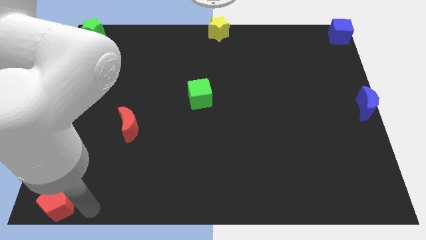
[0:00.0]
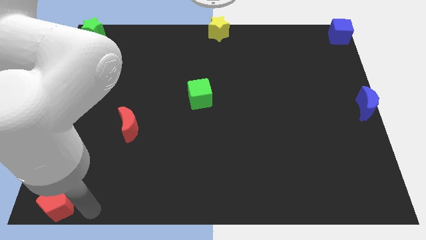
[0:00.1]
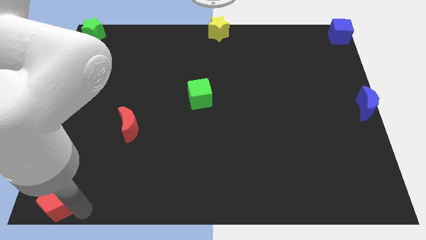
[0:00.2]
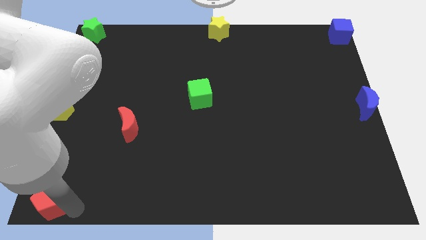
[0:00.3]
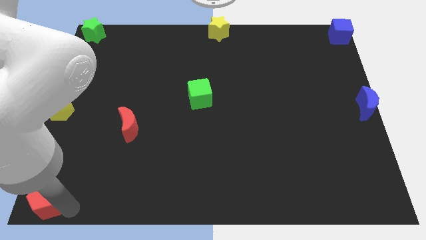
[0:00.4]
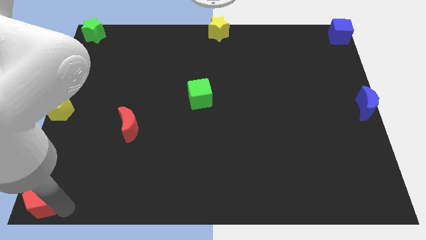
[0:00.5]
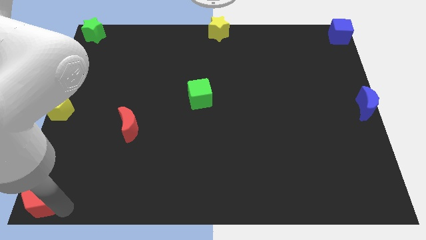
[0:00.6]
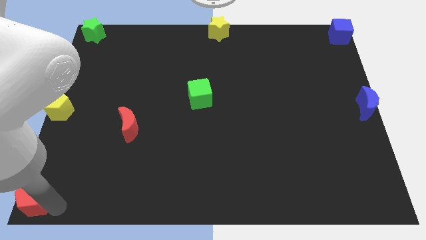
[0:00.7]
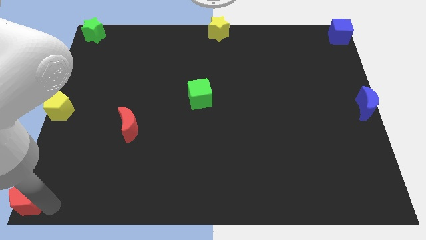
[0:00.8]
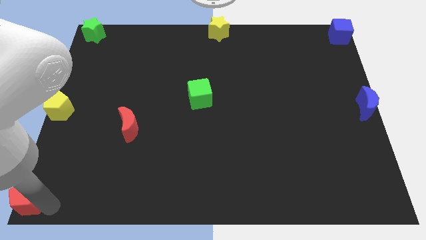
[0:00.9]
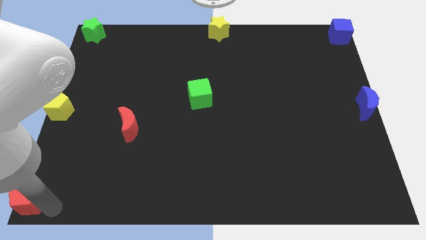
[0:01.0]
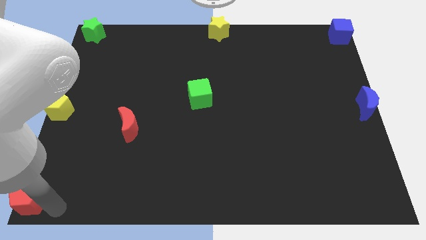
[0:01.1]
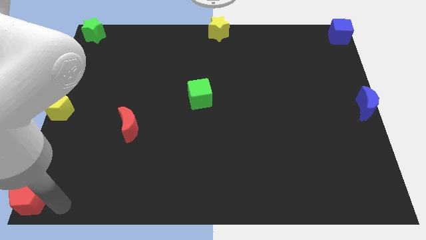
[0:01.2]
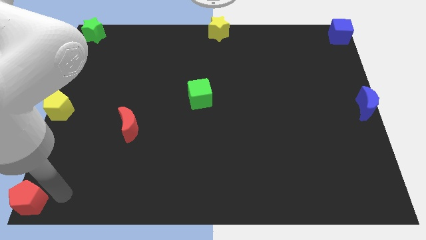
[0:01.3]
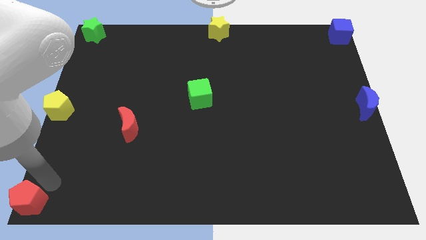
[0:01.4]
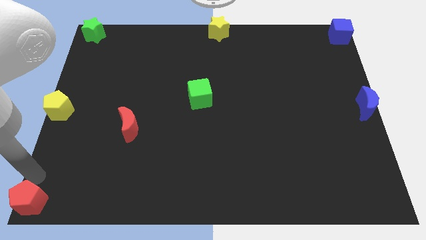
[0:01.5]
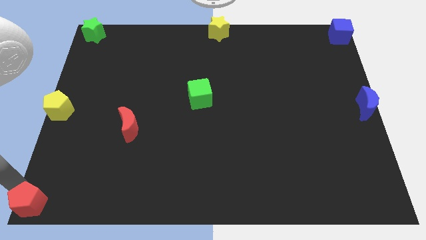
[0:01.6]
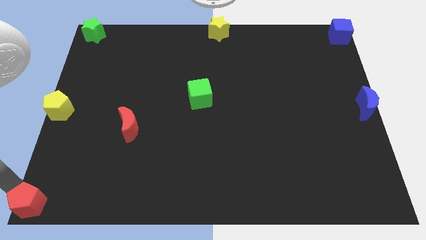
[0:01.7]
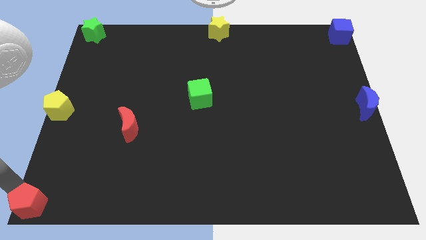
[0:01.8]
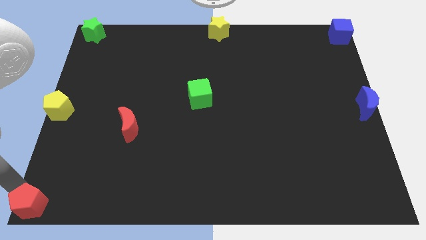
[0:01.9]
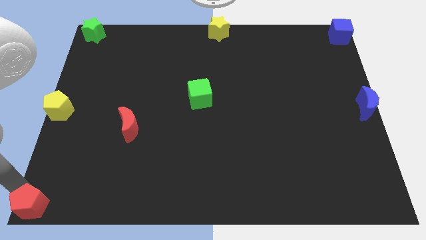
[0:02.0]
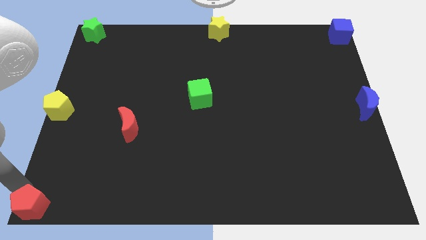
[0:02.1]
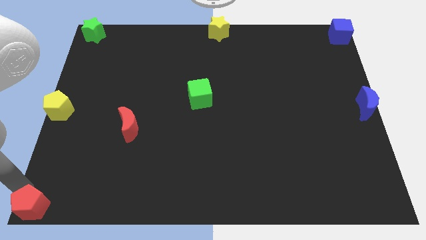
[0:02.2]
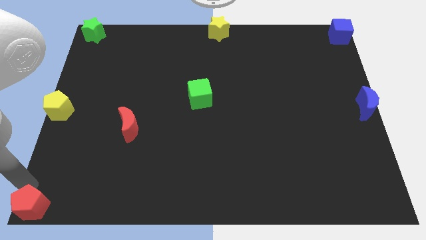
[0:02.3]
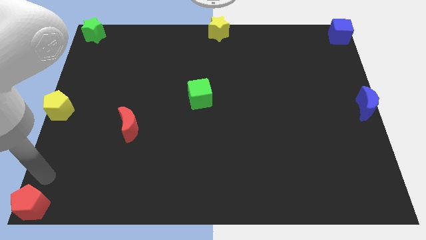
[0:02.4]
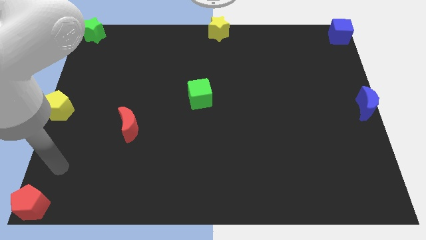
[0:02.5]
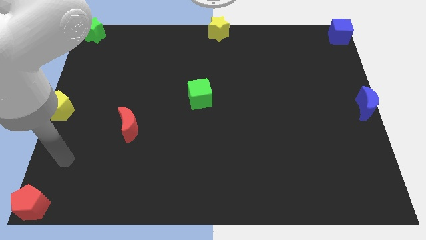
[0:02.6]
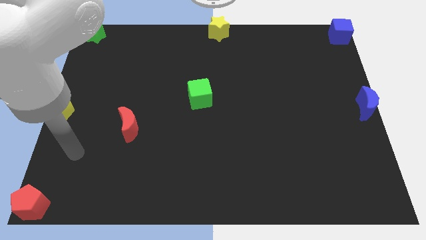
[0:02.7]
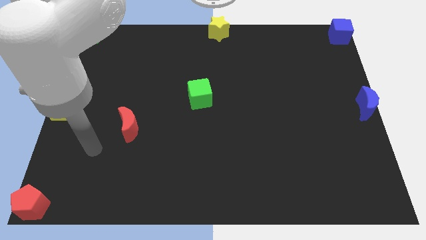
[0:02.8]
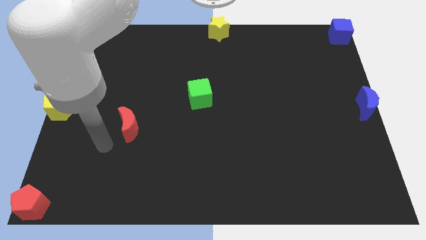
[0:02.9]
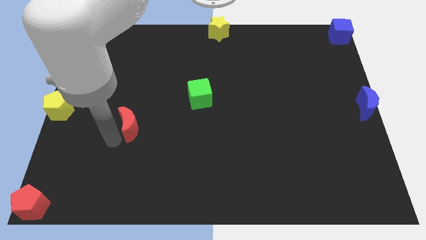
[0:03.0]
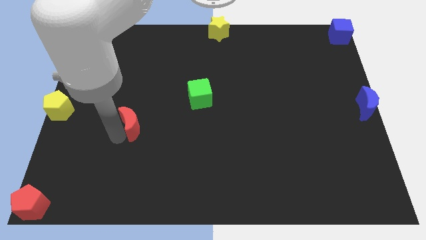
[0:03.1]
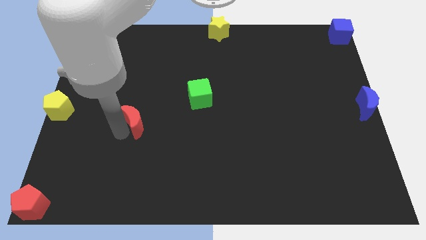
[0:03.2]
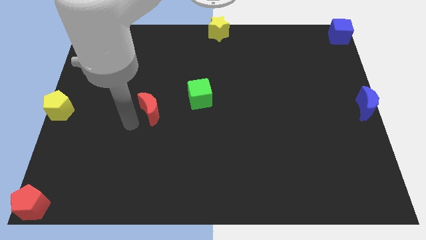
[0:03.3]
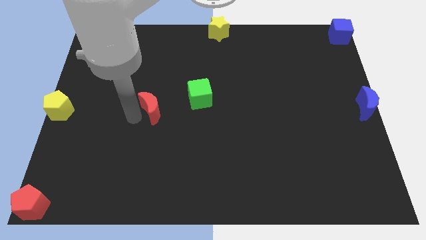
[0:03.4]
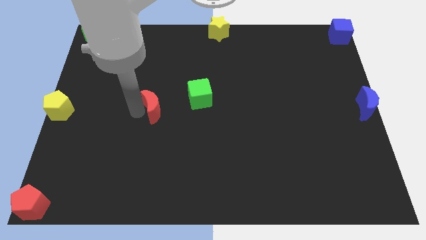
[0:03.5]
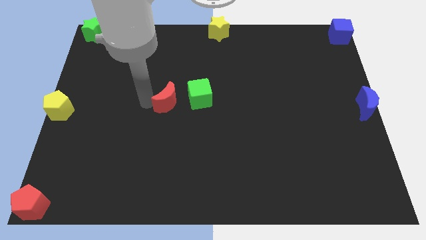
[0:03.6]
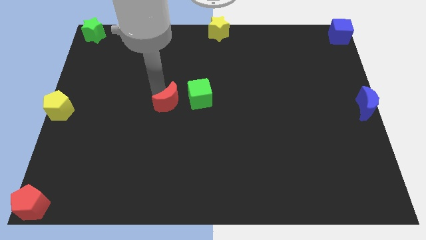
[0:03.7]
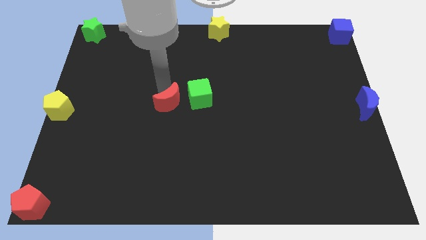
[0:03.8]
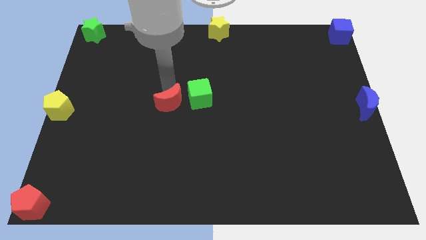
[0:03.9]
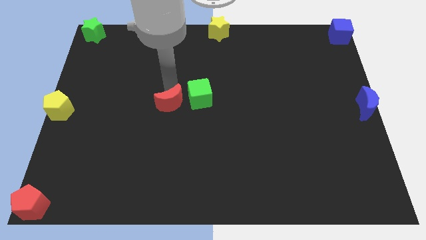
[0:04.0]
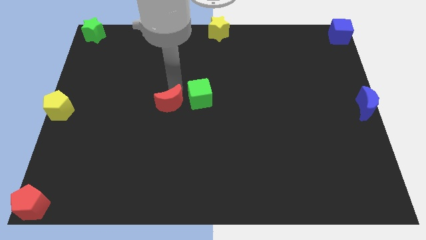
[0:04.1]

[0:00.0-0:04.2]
push red crescent close to the green cube

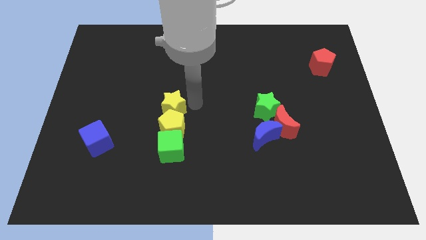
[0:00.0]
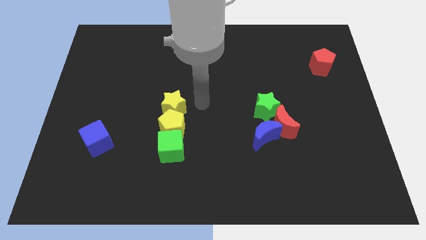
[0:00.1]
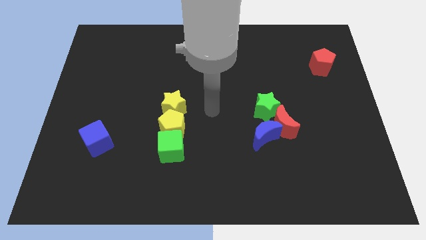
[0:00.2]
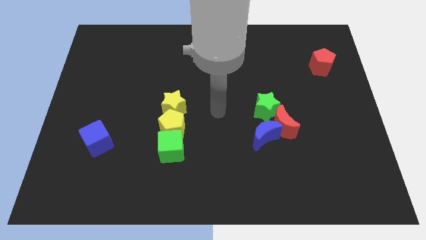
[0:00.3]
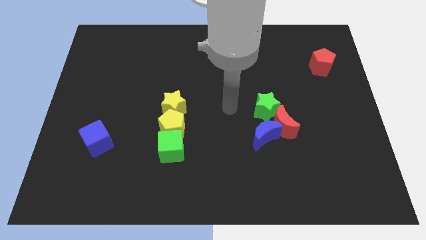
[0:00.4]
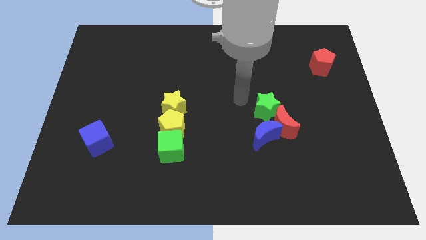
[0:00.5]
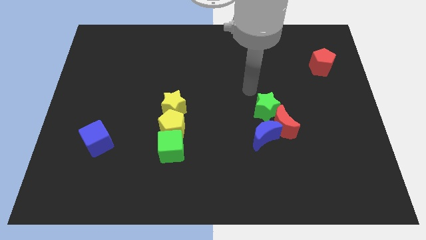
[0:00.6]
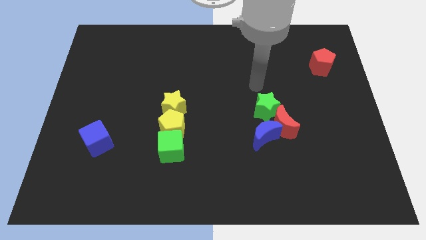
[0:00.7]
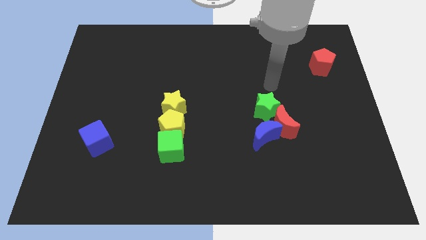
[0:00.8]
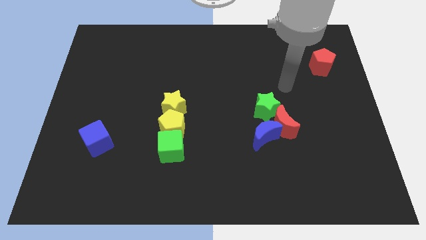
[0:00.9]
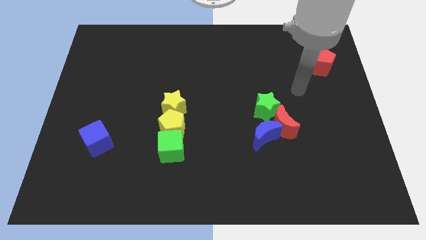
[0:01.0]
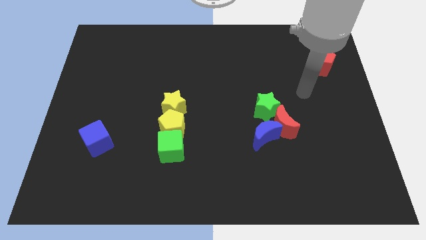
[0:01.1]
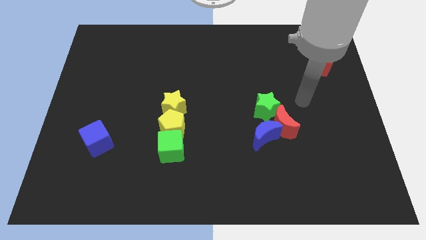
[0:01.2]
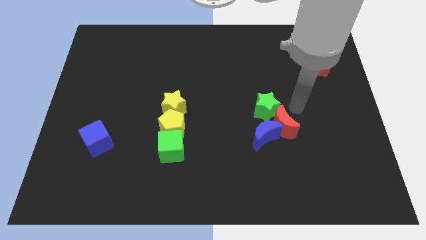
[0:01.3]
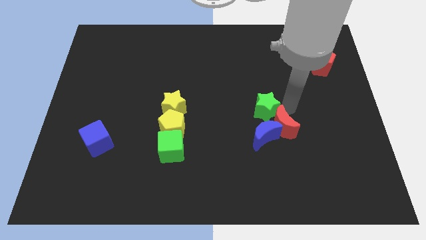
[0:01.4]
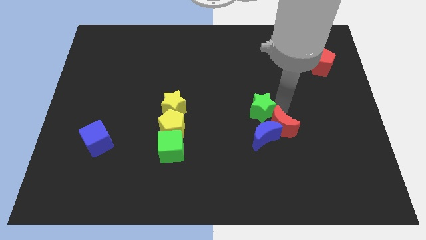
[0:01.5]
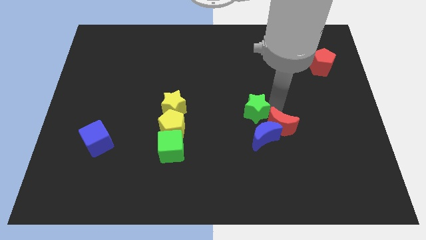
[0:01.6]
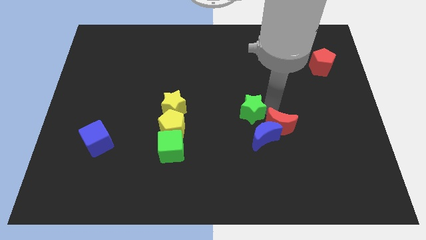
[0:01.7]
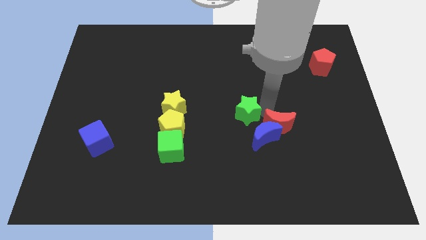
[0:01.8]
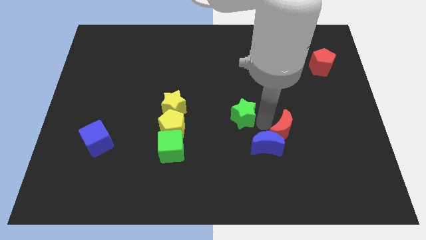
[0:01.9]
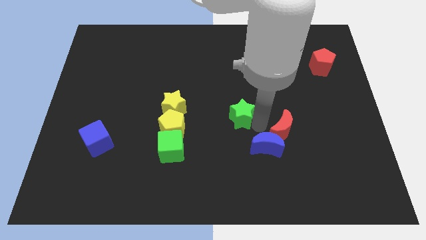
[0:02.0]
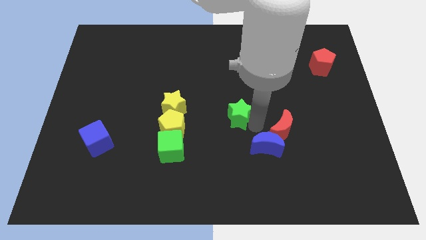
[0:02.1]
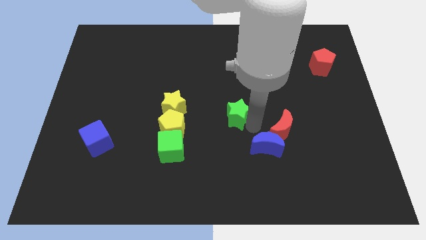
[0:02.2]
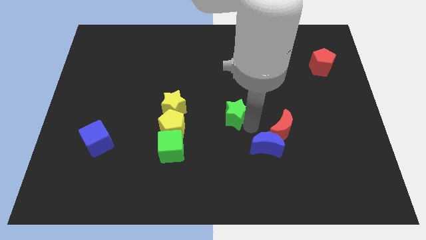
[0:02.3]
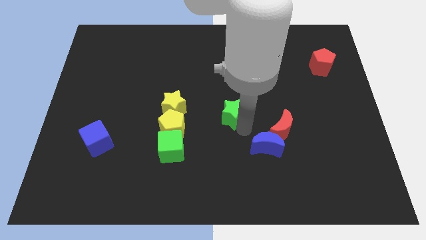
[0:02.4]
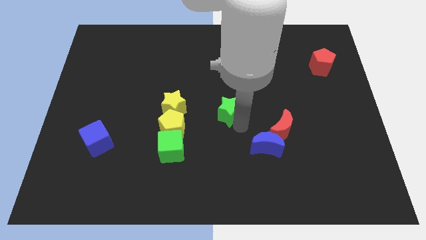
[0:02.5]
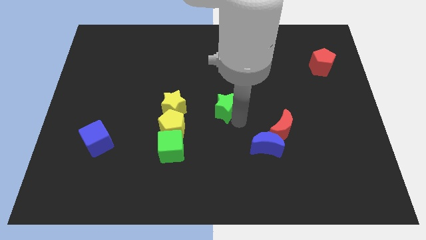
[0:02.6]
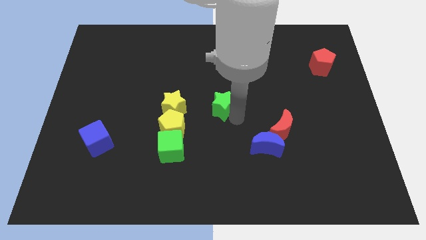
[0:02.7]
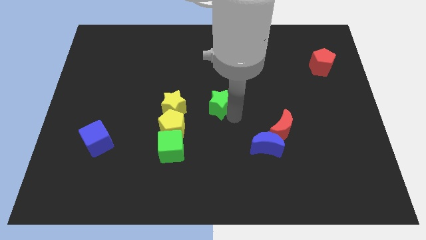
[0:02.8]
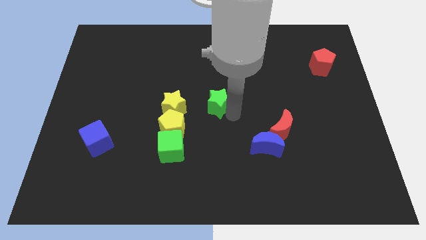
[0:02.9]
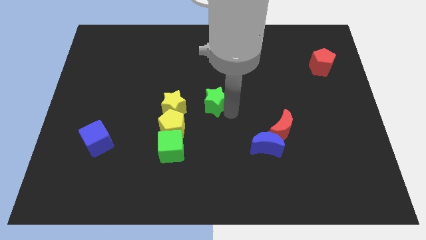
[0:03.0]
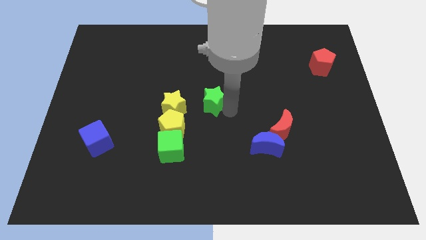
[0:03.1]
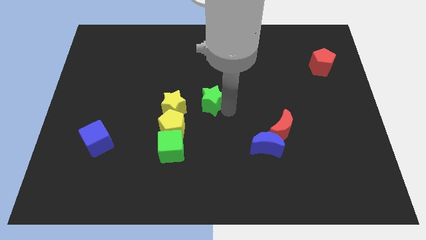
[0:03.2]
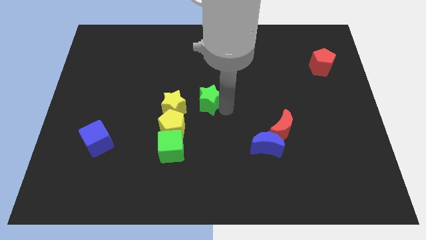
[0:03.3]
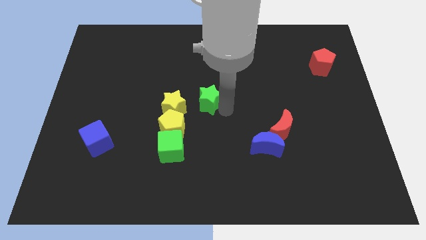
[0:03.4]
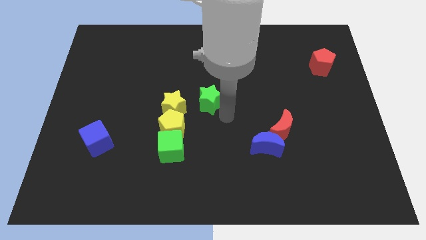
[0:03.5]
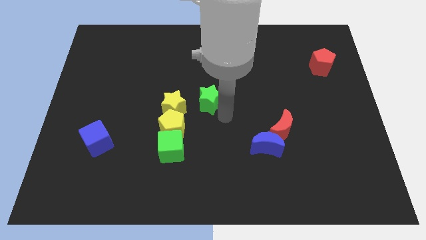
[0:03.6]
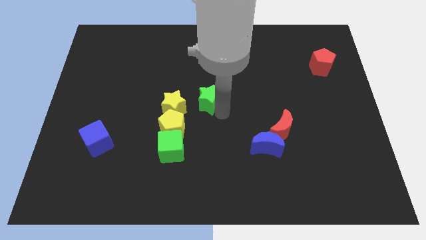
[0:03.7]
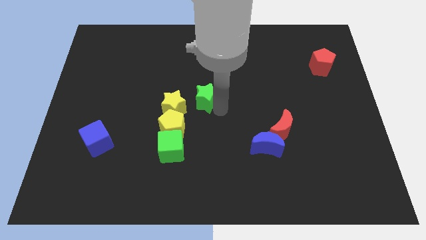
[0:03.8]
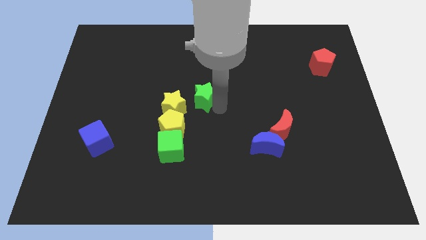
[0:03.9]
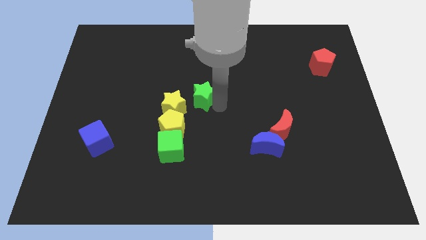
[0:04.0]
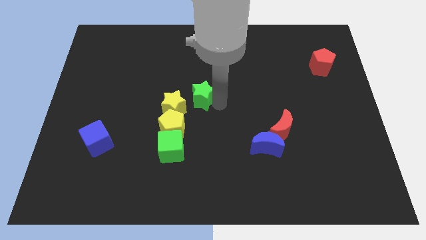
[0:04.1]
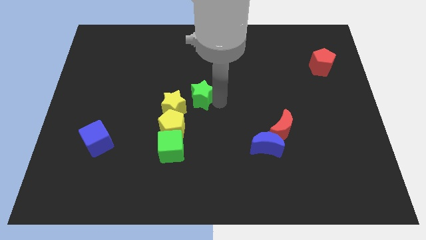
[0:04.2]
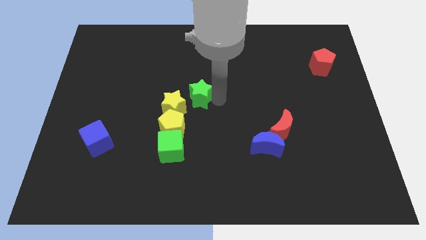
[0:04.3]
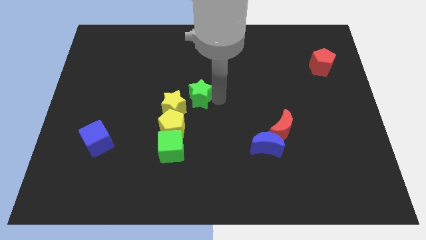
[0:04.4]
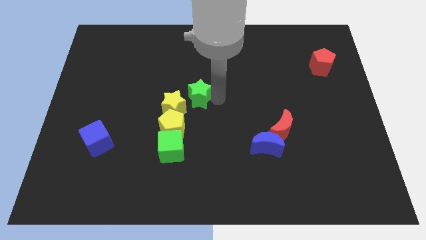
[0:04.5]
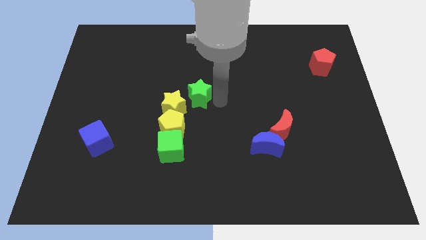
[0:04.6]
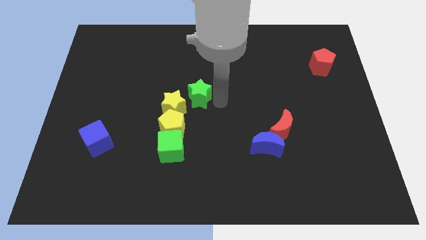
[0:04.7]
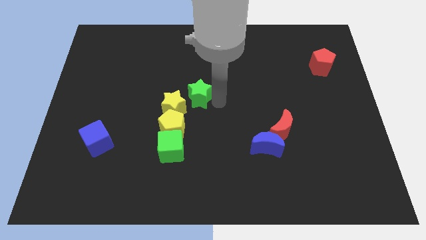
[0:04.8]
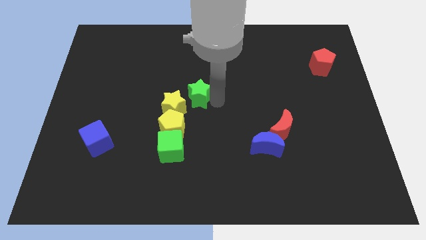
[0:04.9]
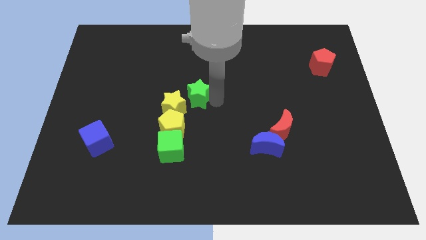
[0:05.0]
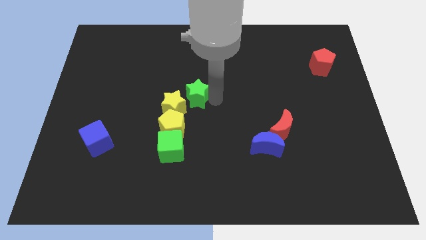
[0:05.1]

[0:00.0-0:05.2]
move the green star towards the right side of the yellow star
